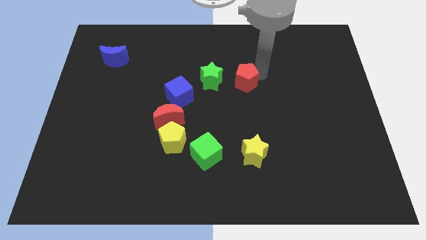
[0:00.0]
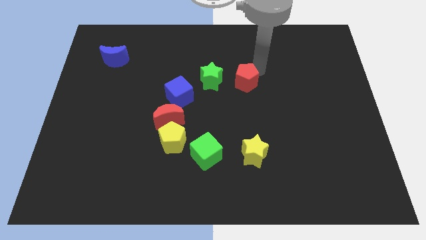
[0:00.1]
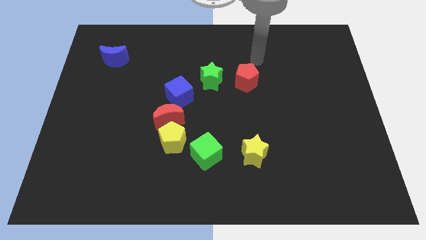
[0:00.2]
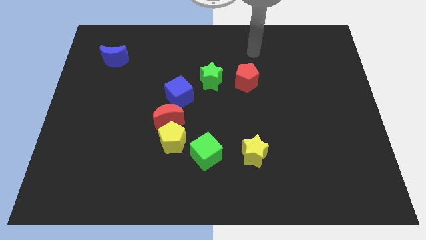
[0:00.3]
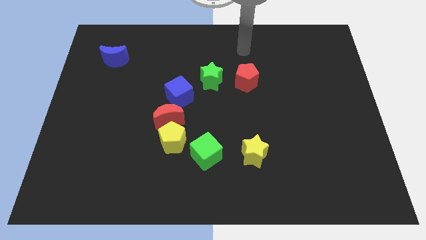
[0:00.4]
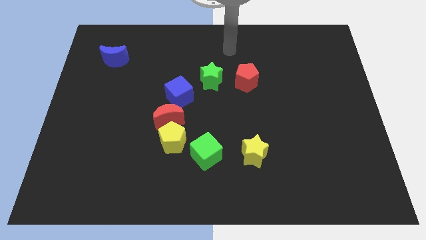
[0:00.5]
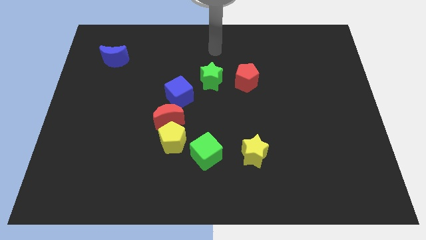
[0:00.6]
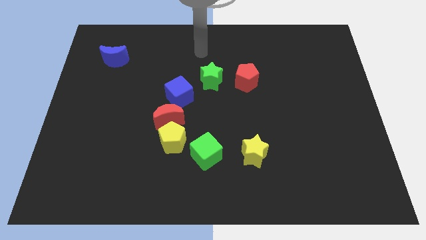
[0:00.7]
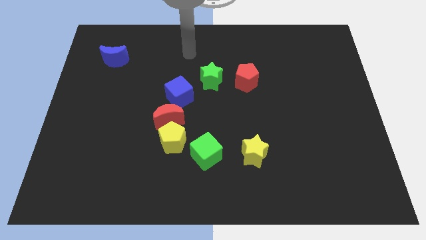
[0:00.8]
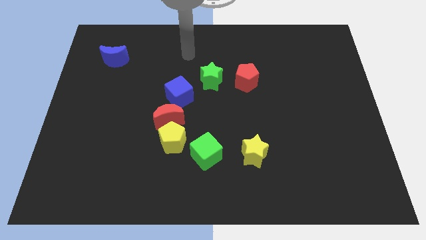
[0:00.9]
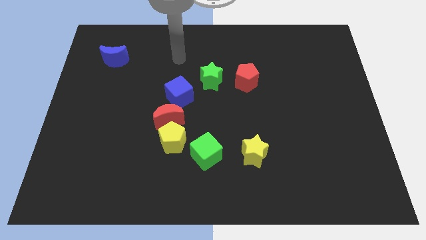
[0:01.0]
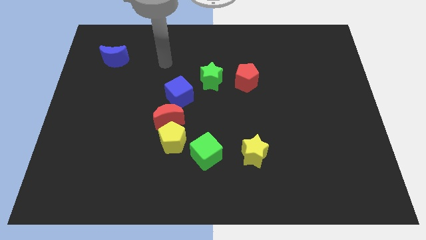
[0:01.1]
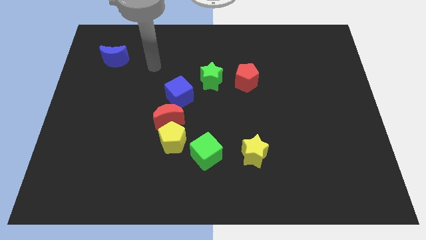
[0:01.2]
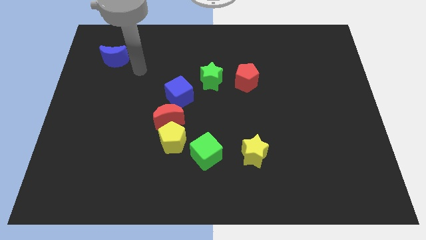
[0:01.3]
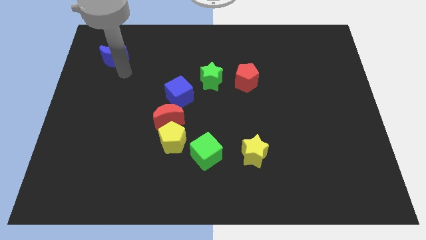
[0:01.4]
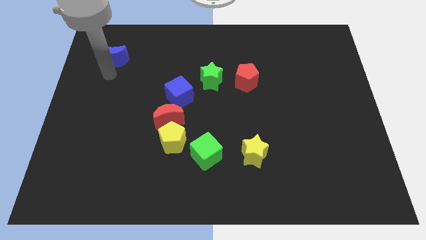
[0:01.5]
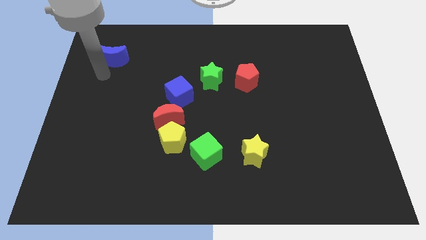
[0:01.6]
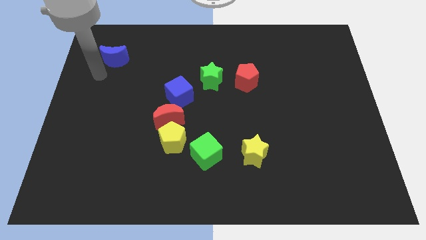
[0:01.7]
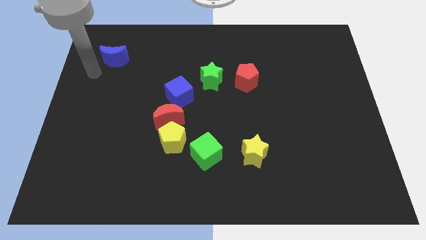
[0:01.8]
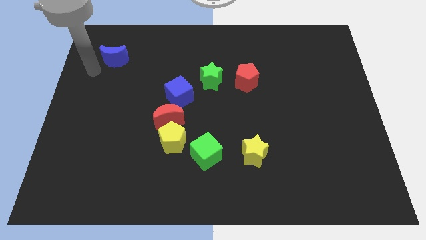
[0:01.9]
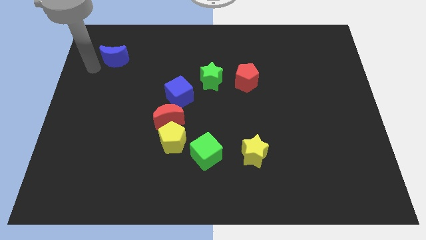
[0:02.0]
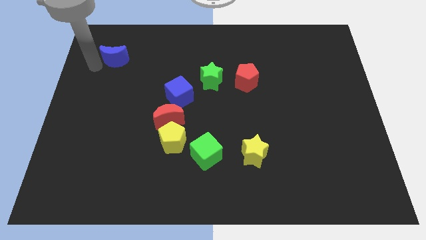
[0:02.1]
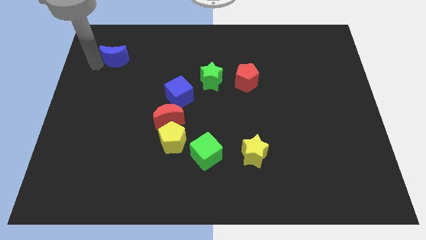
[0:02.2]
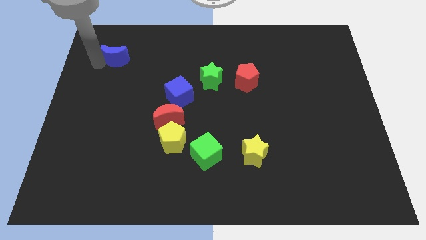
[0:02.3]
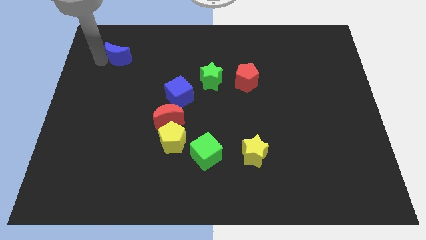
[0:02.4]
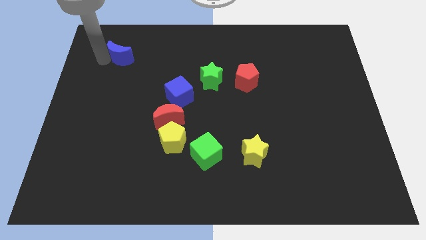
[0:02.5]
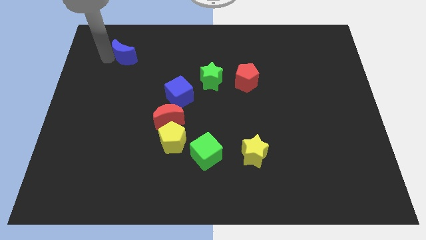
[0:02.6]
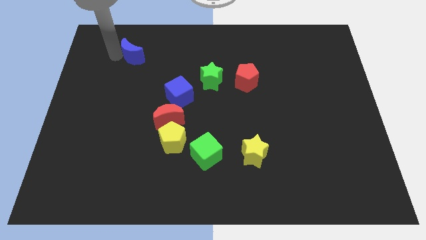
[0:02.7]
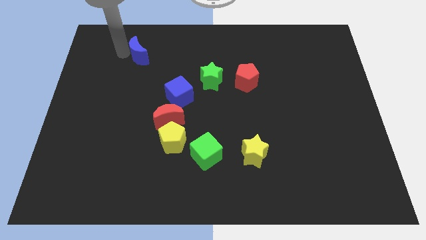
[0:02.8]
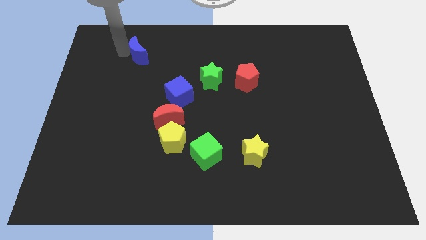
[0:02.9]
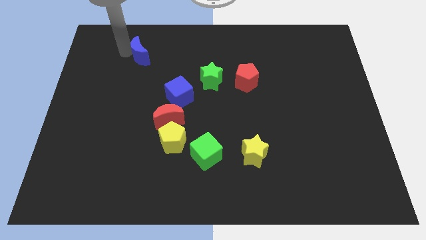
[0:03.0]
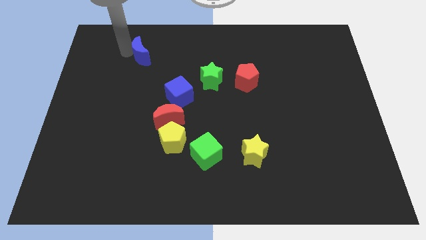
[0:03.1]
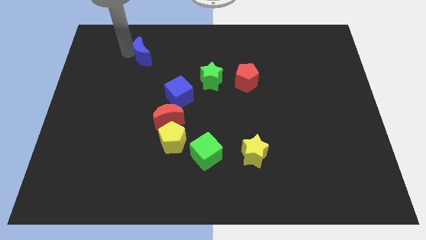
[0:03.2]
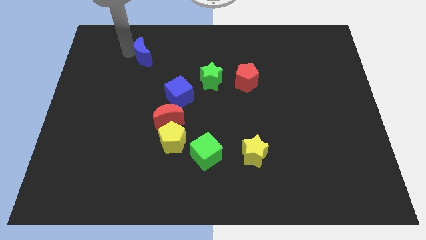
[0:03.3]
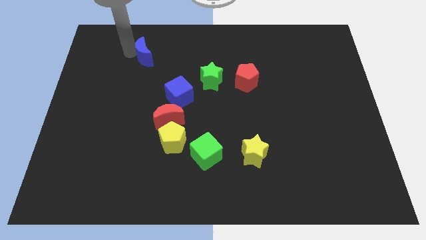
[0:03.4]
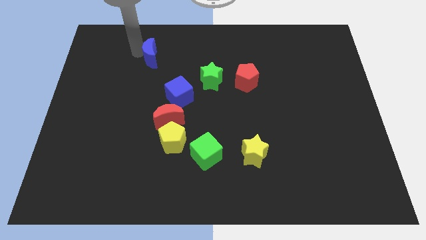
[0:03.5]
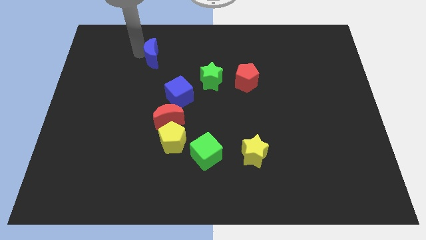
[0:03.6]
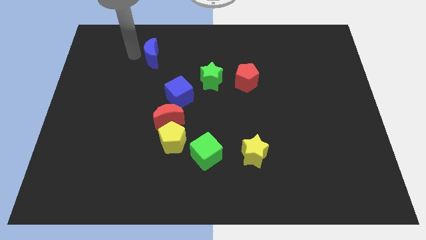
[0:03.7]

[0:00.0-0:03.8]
push the blue to the right side of the table

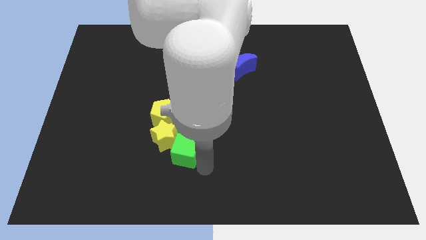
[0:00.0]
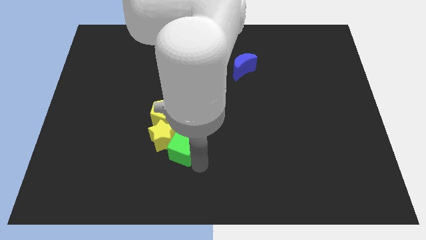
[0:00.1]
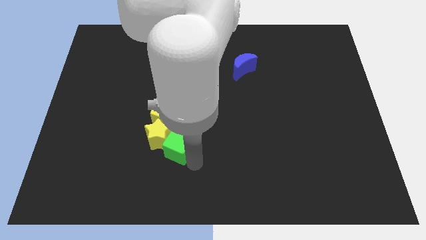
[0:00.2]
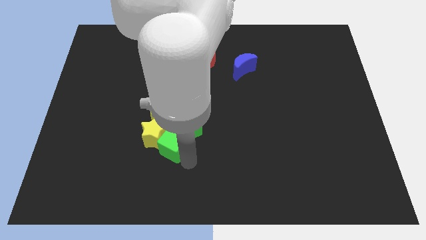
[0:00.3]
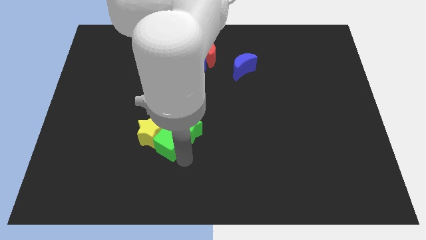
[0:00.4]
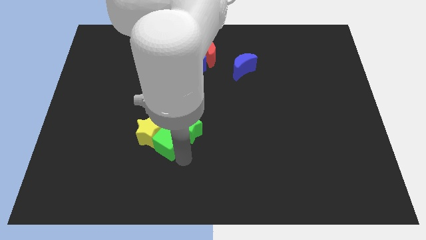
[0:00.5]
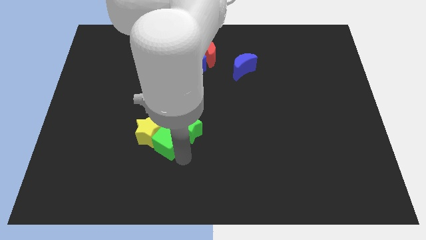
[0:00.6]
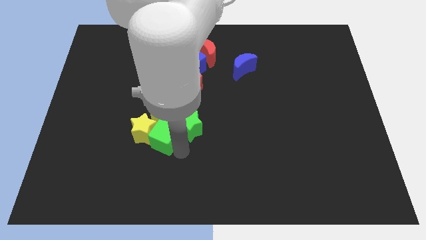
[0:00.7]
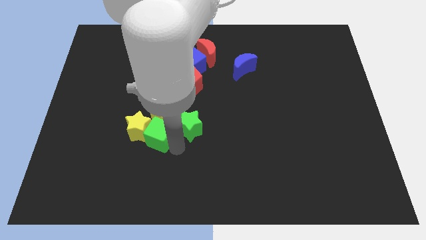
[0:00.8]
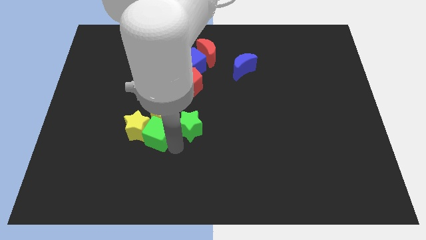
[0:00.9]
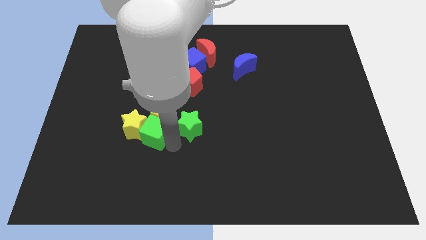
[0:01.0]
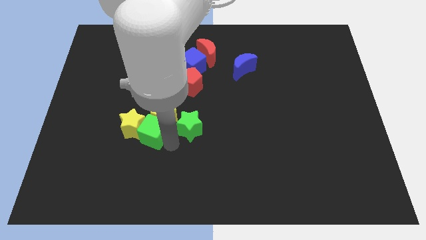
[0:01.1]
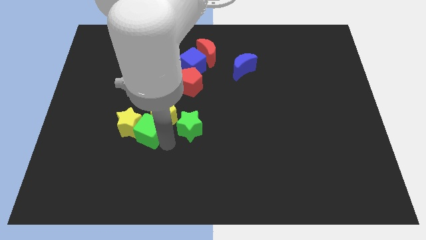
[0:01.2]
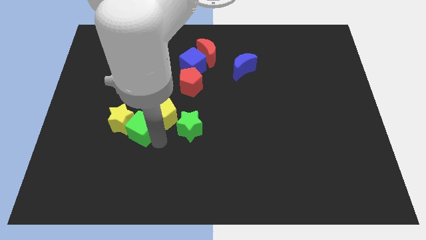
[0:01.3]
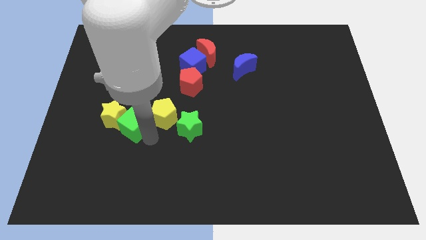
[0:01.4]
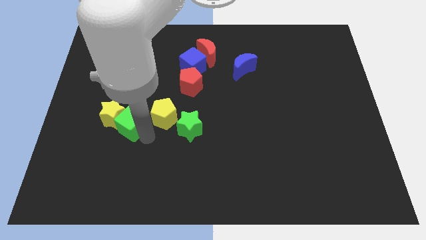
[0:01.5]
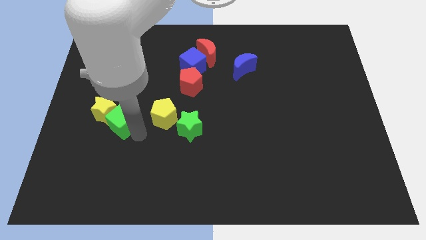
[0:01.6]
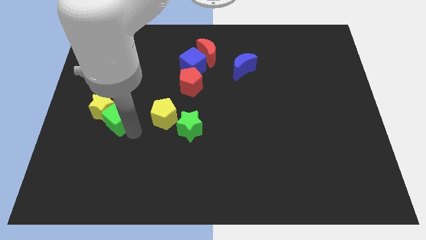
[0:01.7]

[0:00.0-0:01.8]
move the green cube along with the yellow star towards the center left of the board

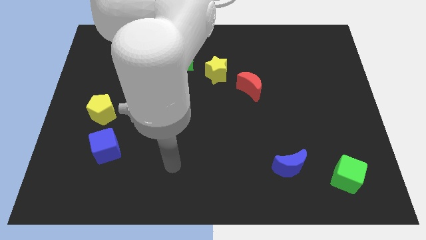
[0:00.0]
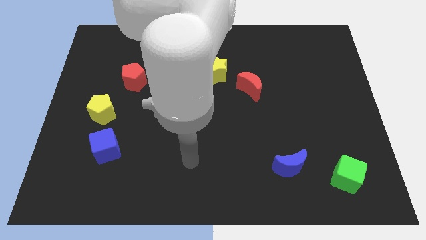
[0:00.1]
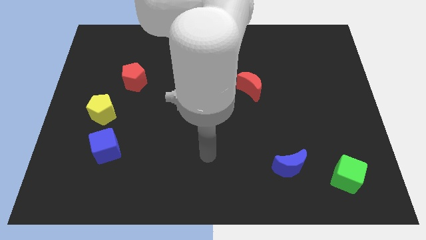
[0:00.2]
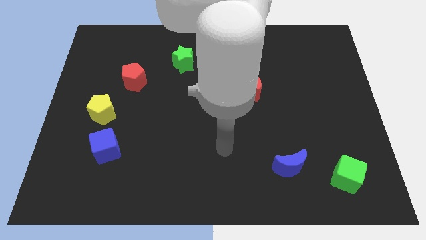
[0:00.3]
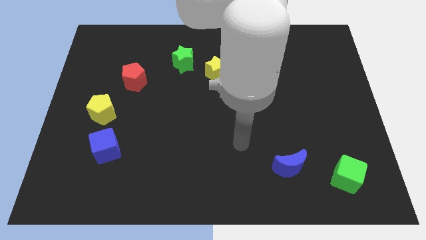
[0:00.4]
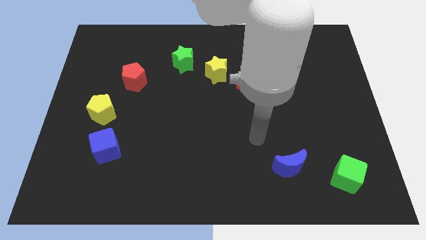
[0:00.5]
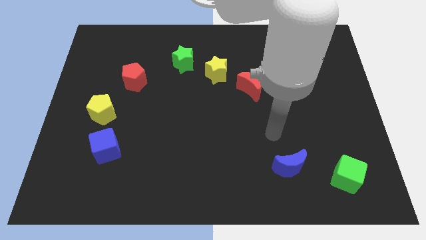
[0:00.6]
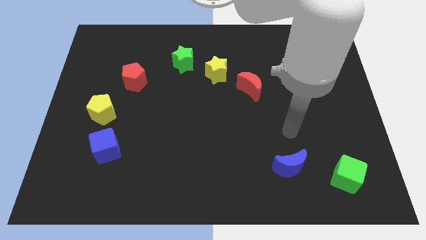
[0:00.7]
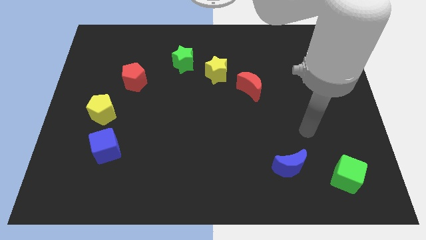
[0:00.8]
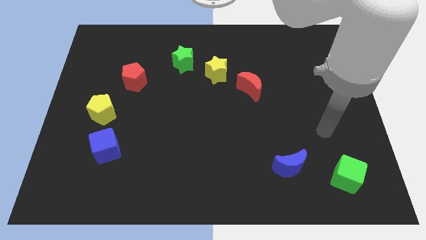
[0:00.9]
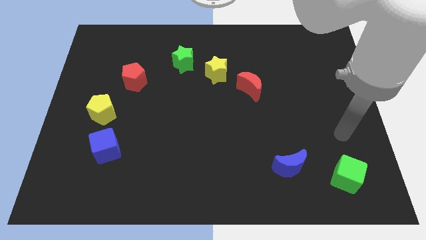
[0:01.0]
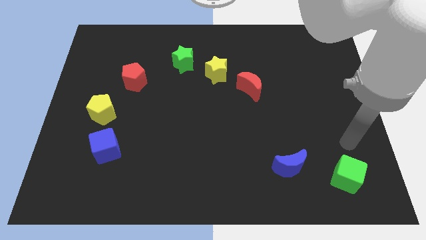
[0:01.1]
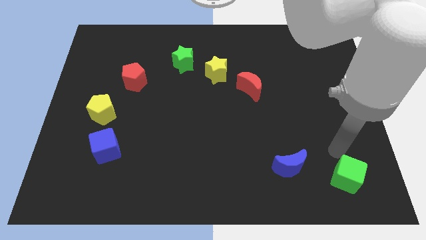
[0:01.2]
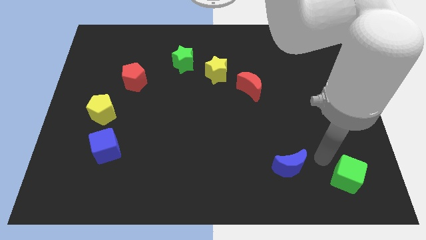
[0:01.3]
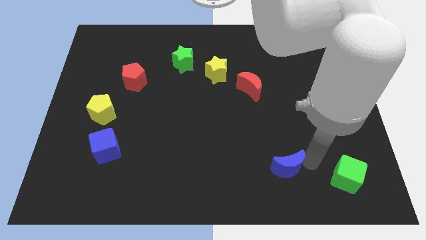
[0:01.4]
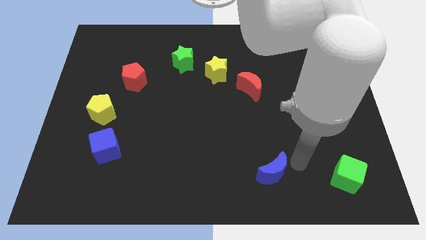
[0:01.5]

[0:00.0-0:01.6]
tap the blue crescent

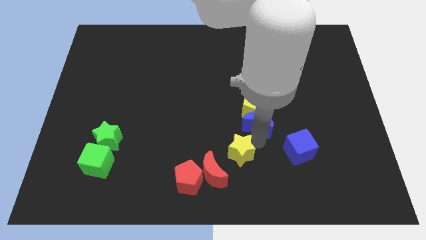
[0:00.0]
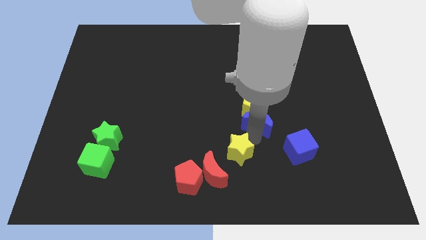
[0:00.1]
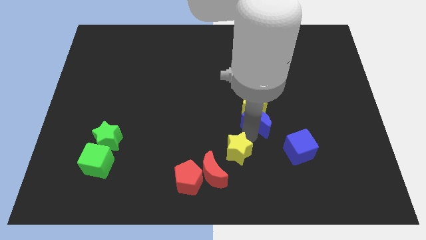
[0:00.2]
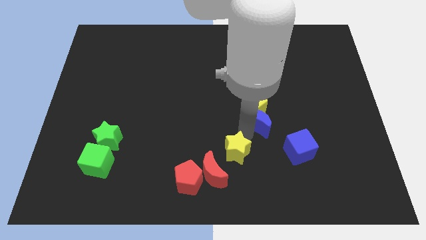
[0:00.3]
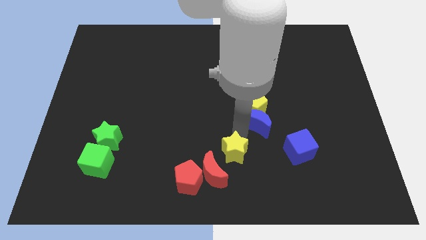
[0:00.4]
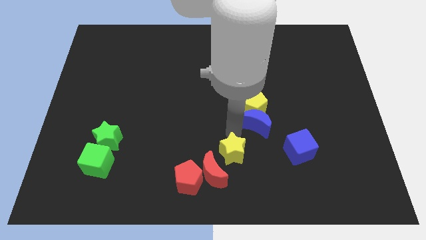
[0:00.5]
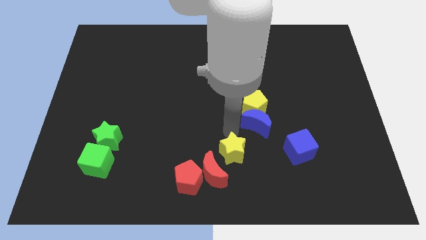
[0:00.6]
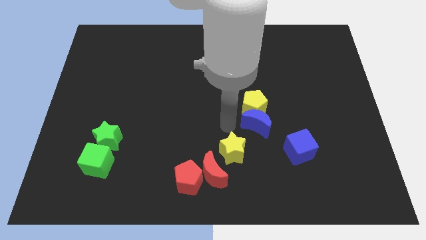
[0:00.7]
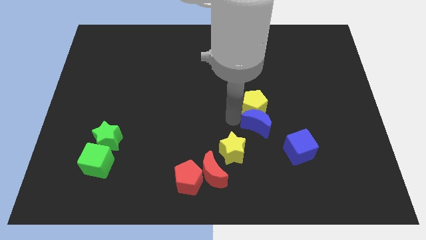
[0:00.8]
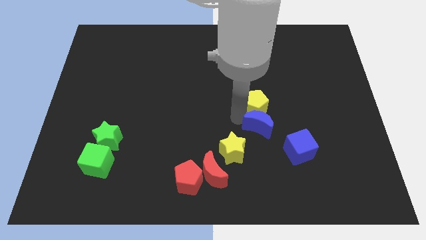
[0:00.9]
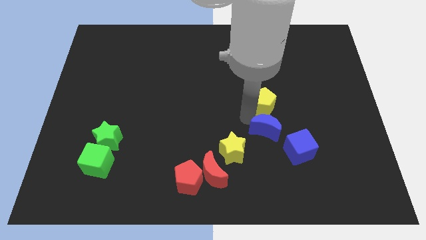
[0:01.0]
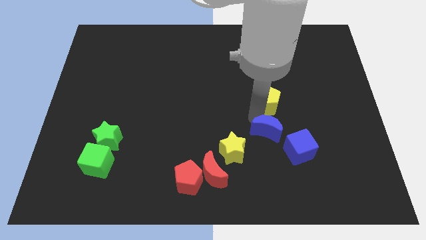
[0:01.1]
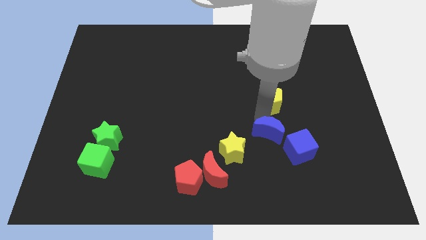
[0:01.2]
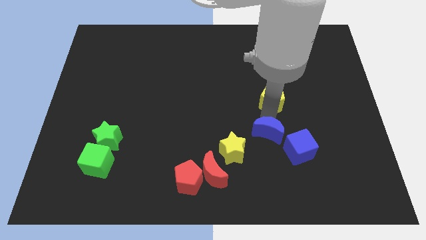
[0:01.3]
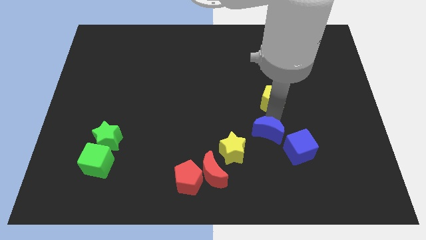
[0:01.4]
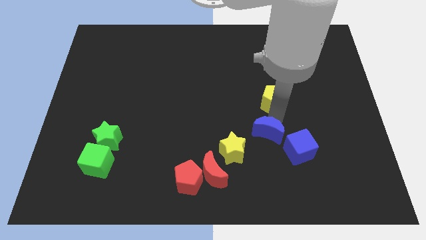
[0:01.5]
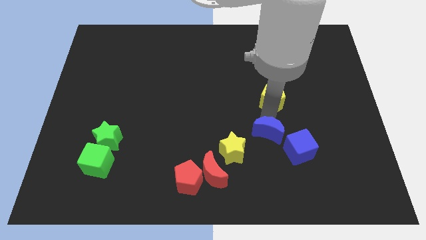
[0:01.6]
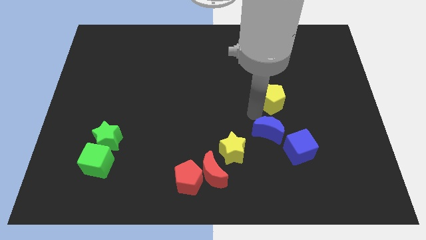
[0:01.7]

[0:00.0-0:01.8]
seperate the blue moon and yellow pentagon

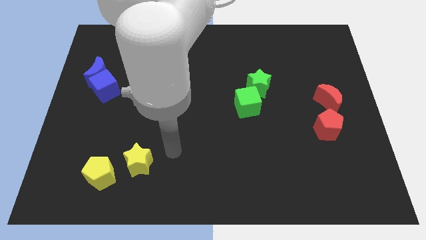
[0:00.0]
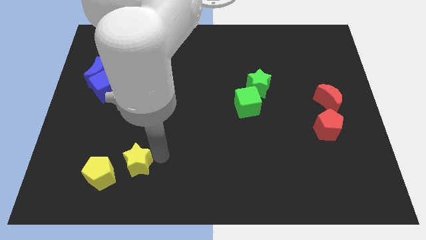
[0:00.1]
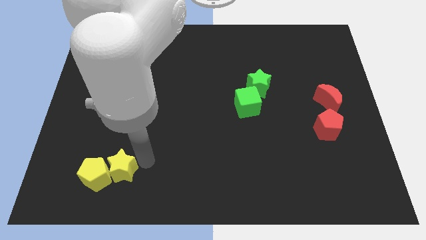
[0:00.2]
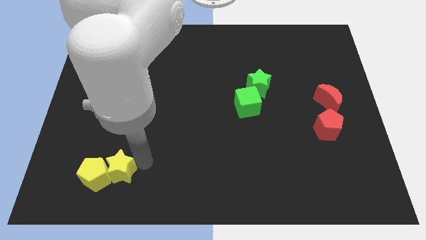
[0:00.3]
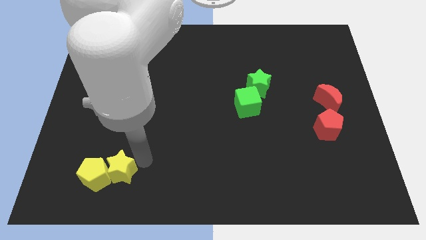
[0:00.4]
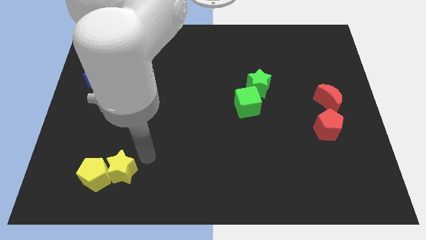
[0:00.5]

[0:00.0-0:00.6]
push the yellow star near yellow pentagon
